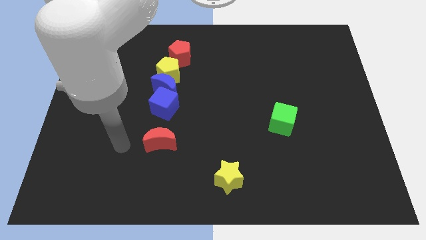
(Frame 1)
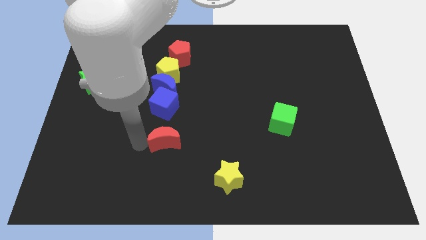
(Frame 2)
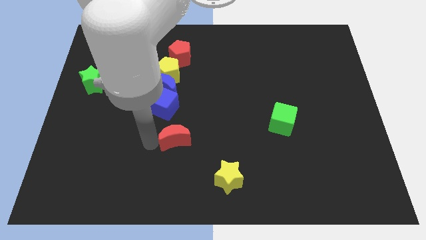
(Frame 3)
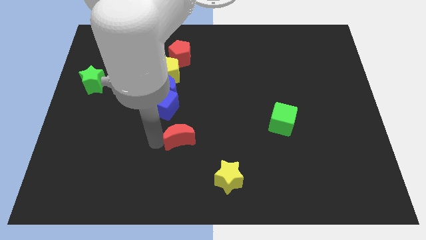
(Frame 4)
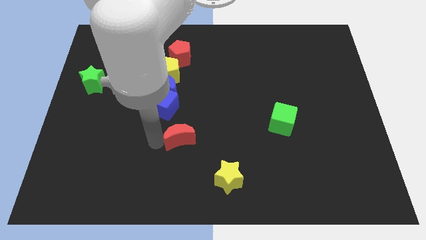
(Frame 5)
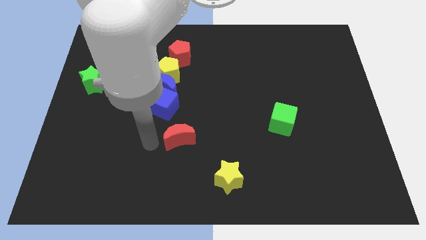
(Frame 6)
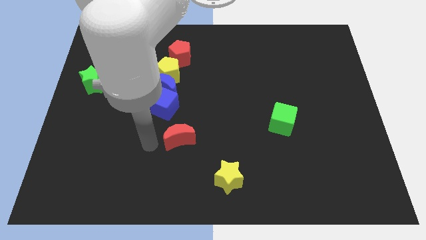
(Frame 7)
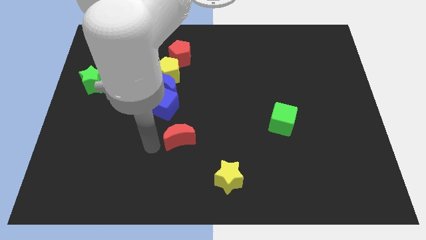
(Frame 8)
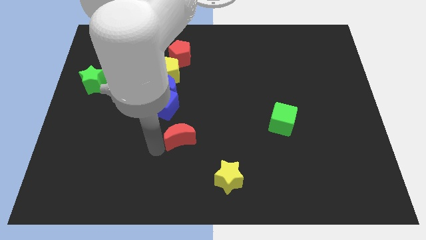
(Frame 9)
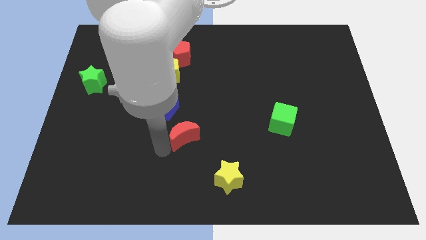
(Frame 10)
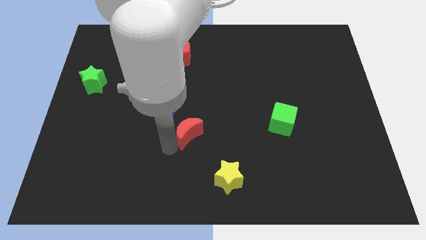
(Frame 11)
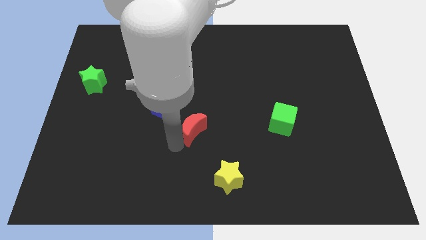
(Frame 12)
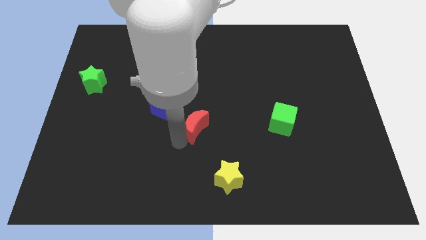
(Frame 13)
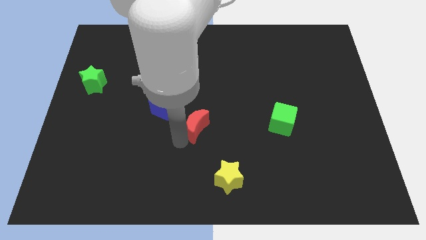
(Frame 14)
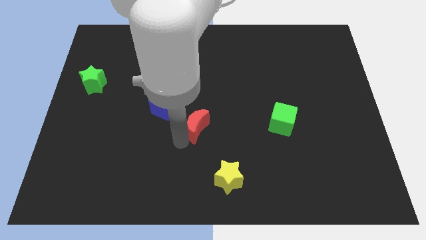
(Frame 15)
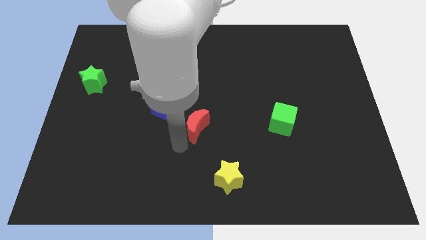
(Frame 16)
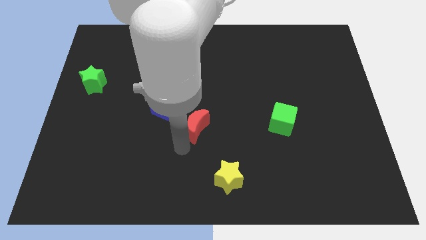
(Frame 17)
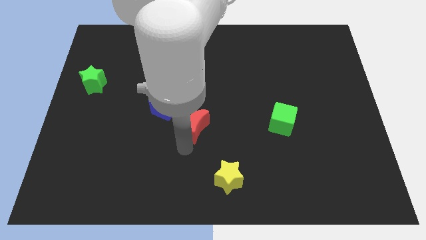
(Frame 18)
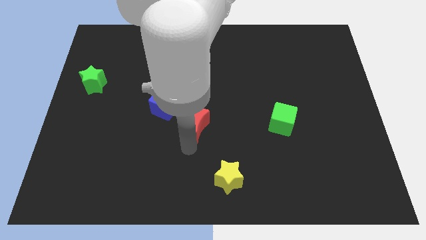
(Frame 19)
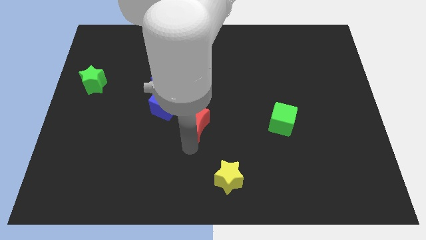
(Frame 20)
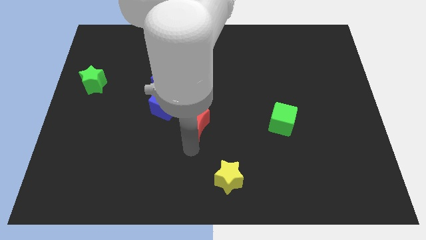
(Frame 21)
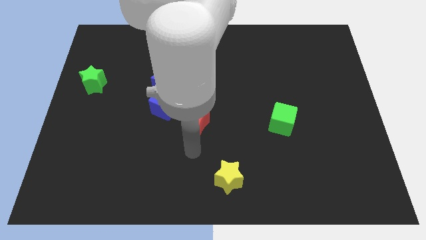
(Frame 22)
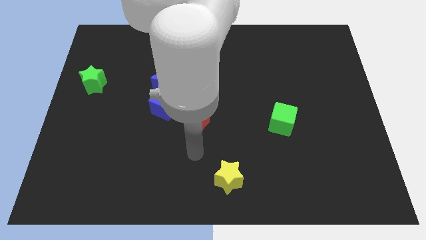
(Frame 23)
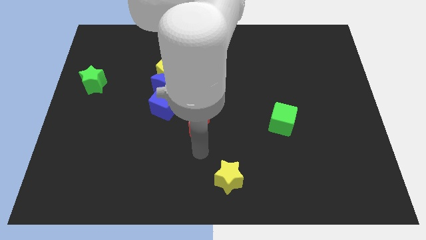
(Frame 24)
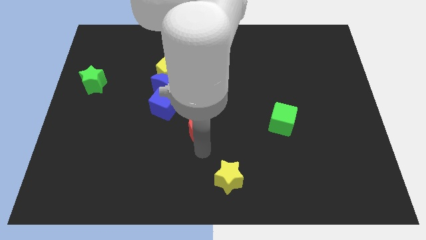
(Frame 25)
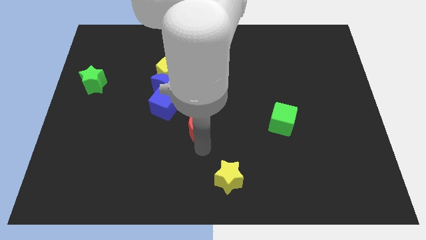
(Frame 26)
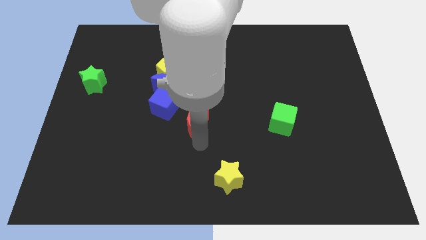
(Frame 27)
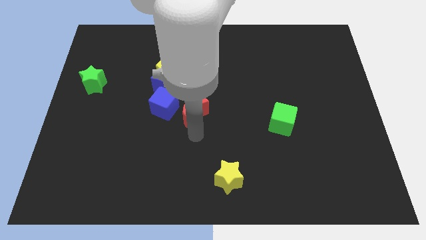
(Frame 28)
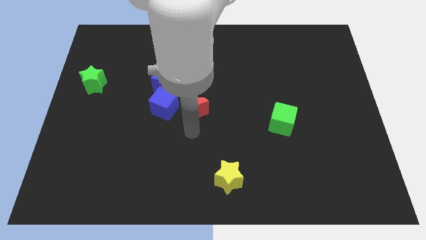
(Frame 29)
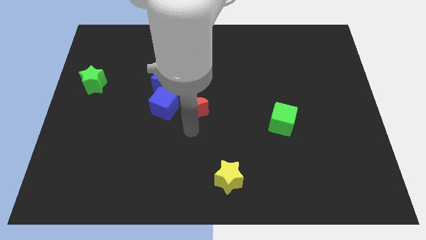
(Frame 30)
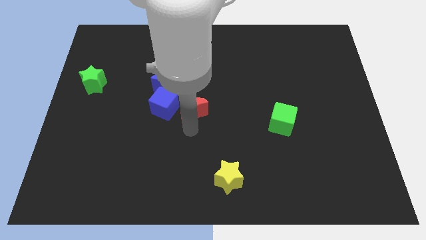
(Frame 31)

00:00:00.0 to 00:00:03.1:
move the red moon near to the right side of the blue cube

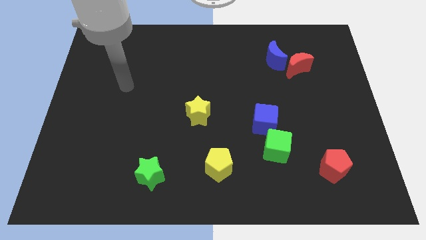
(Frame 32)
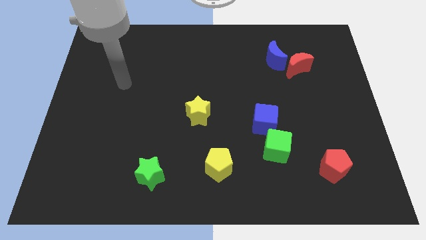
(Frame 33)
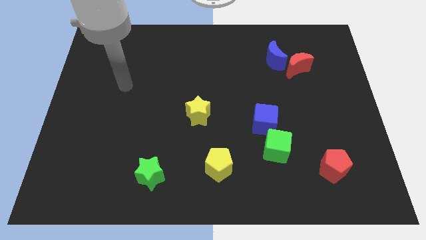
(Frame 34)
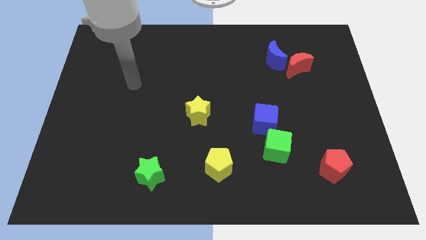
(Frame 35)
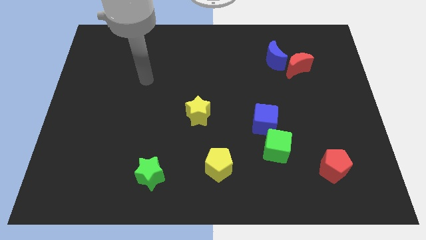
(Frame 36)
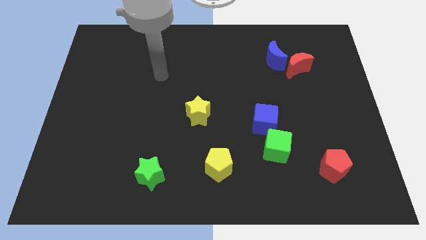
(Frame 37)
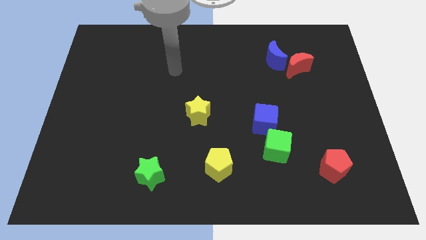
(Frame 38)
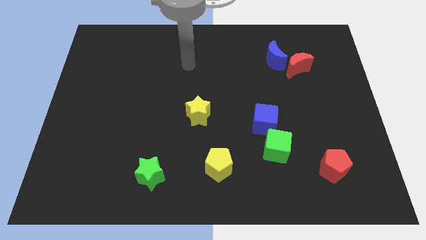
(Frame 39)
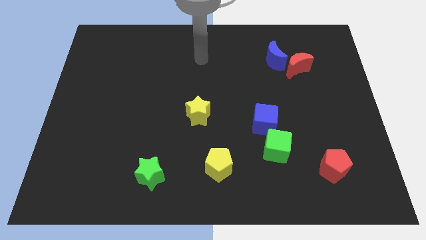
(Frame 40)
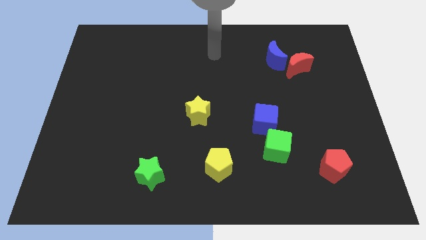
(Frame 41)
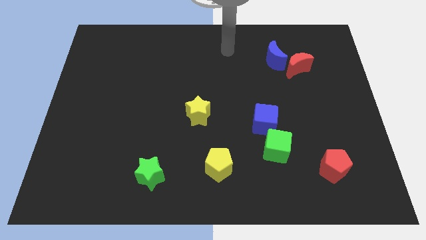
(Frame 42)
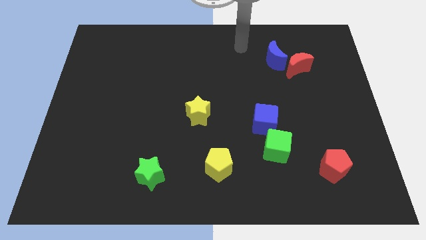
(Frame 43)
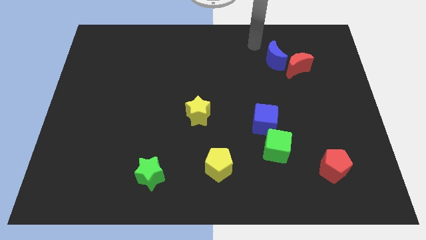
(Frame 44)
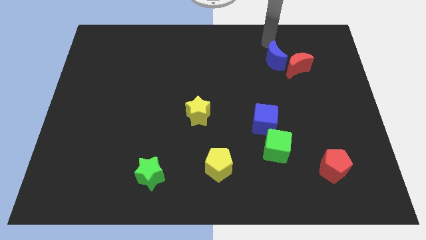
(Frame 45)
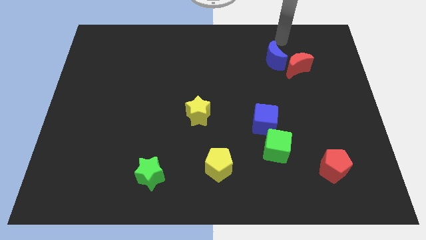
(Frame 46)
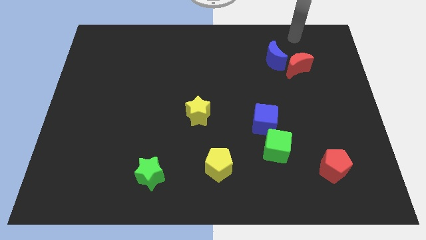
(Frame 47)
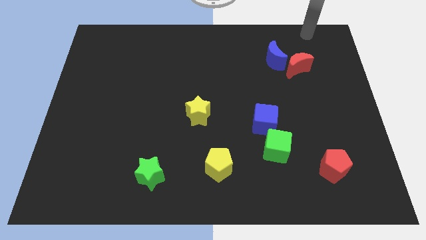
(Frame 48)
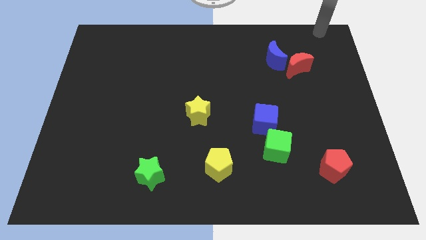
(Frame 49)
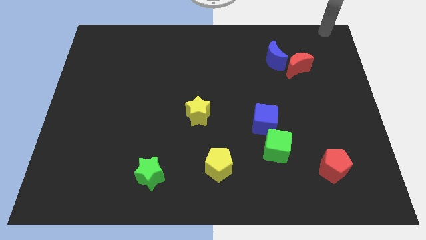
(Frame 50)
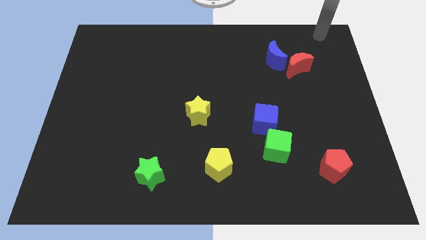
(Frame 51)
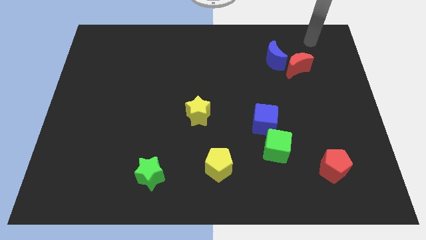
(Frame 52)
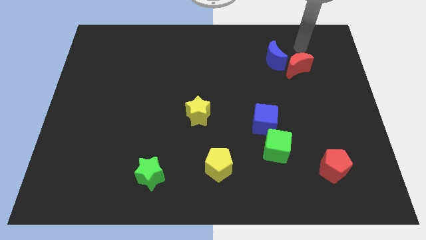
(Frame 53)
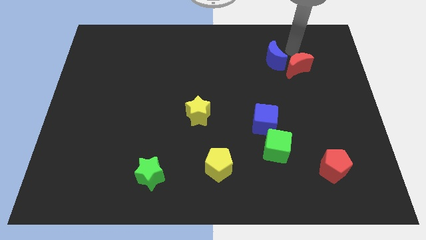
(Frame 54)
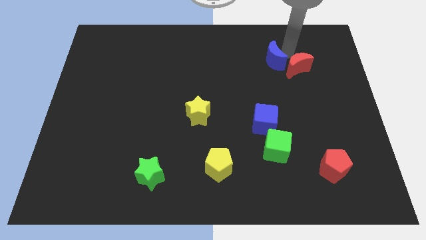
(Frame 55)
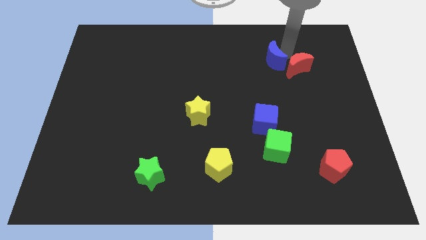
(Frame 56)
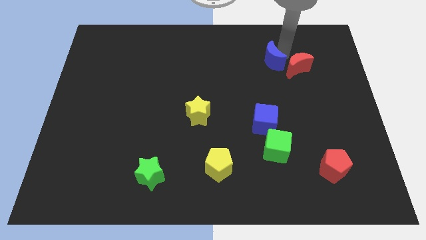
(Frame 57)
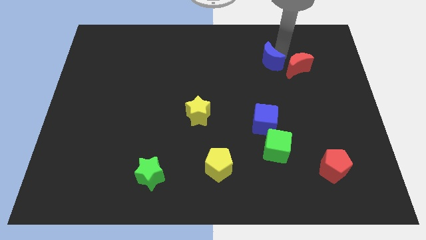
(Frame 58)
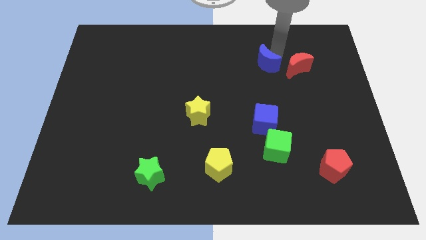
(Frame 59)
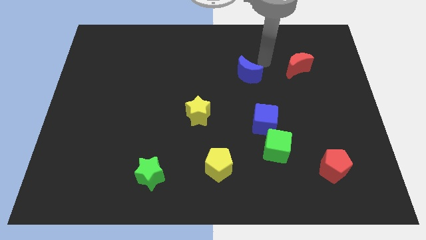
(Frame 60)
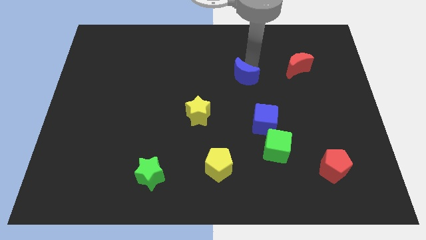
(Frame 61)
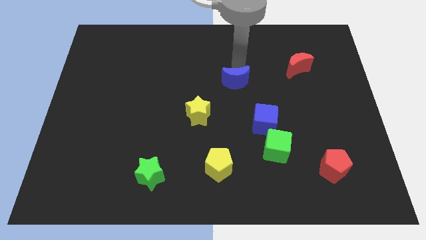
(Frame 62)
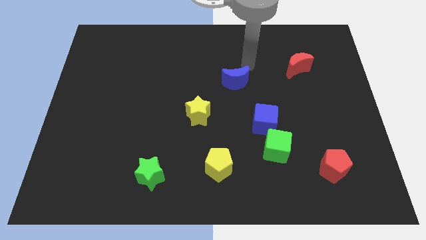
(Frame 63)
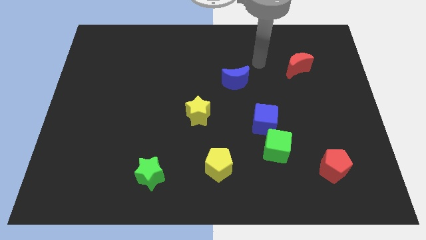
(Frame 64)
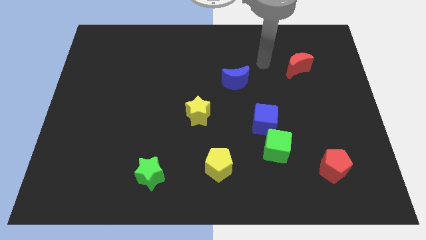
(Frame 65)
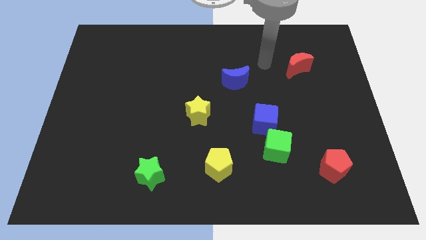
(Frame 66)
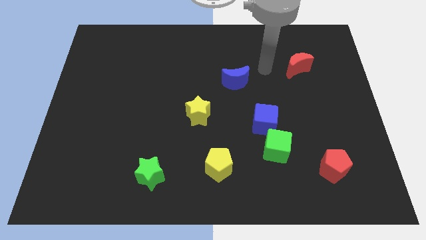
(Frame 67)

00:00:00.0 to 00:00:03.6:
move the blue crescent away from the red crescent

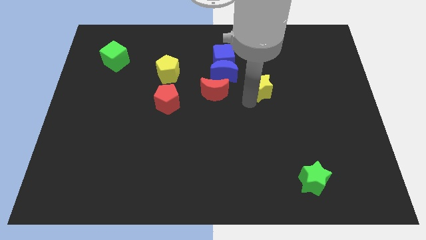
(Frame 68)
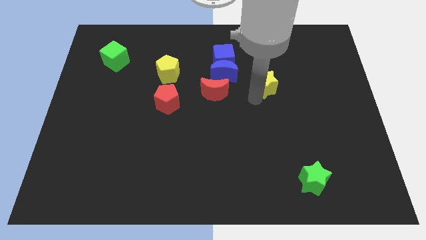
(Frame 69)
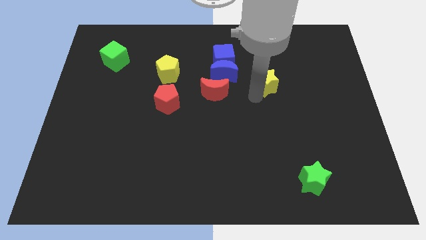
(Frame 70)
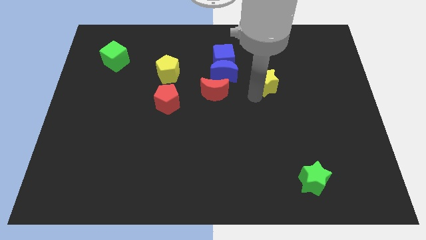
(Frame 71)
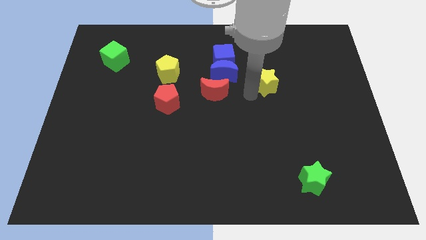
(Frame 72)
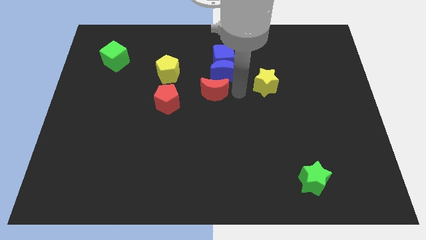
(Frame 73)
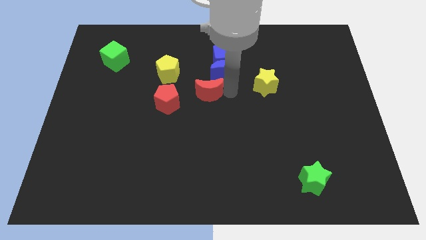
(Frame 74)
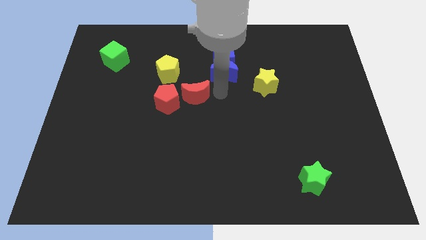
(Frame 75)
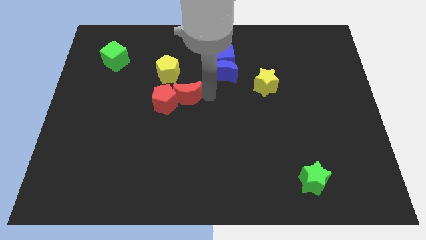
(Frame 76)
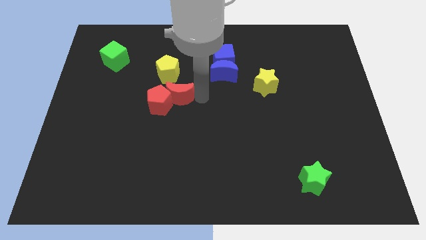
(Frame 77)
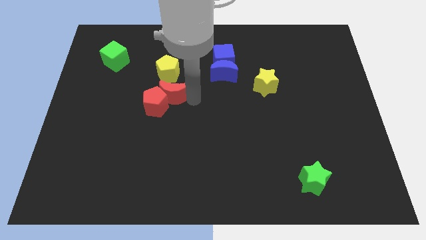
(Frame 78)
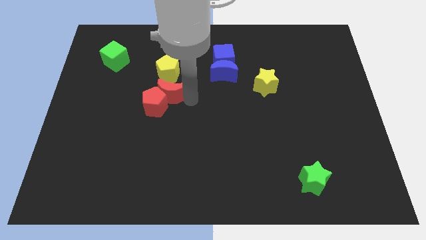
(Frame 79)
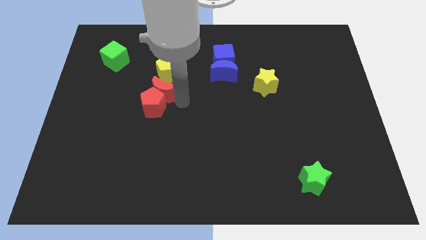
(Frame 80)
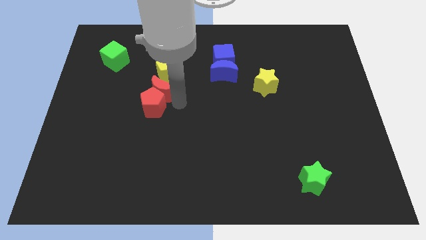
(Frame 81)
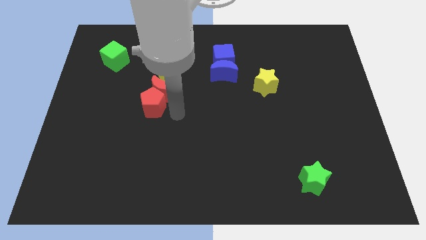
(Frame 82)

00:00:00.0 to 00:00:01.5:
push the red crescent close to red pentagon on the board

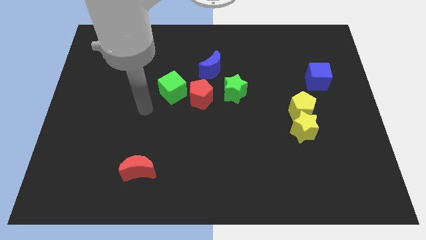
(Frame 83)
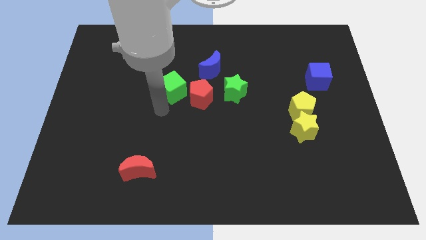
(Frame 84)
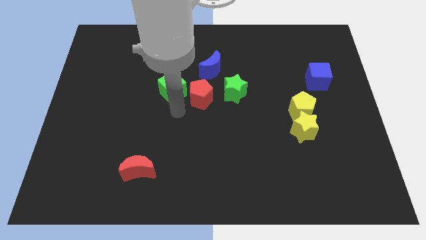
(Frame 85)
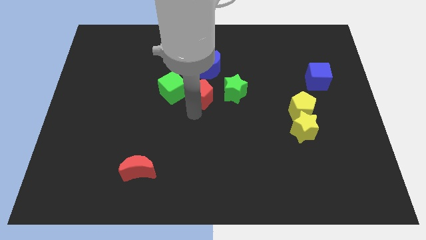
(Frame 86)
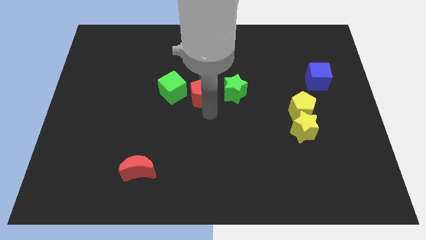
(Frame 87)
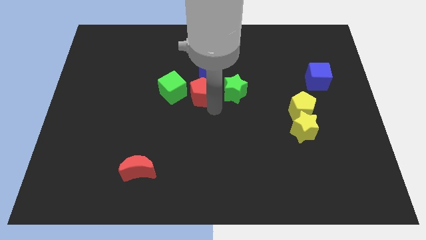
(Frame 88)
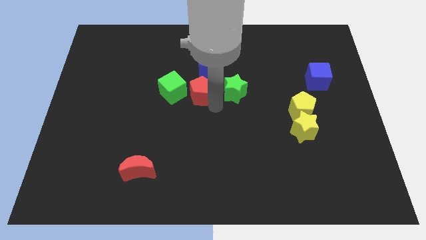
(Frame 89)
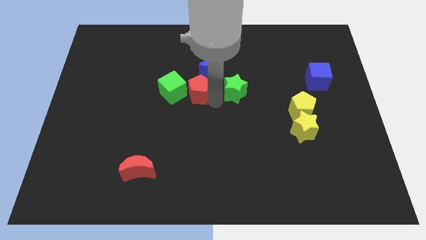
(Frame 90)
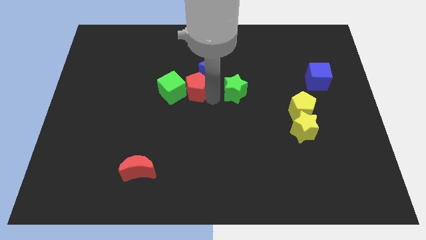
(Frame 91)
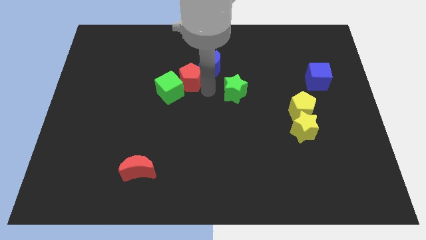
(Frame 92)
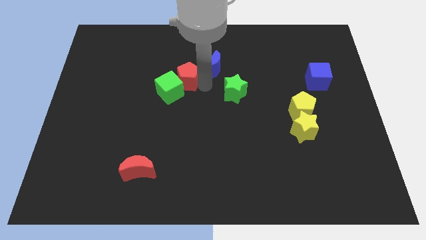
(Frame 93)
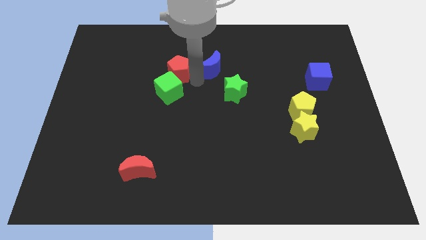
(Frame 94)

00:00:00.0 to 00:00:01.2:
move the red pentagon in between the green cube and the blue moon
